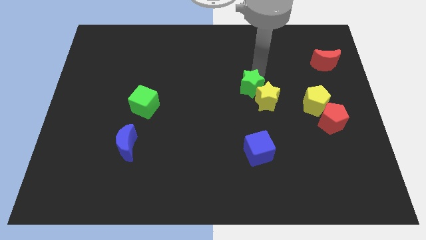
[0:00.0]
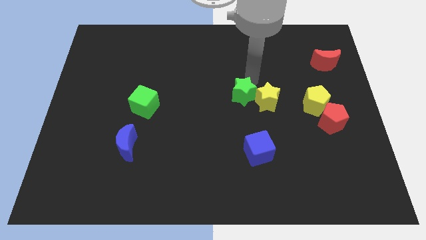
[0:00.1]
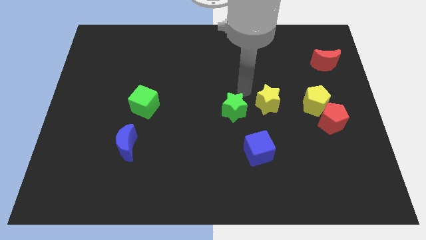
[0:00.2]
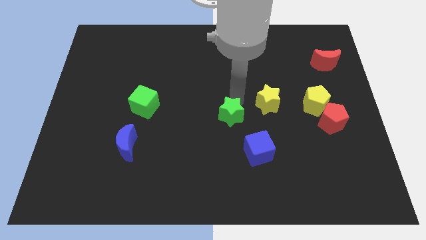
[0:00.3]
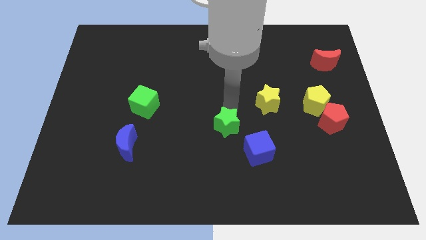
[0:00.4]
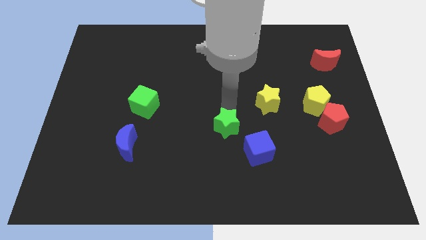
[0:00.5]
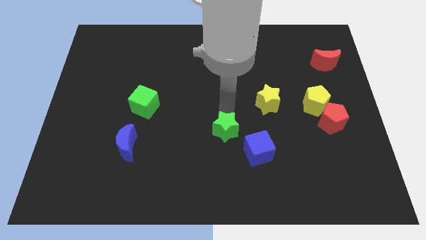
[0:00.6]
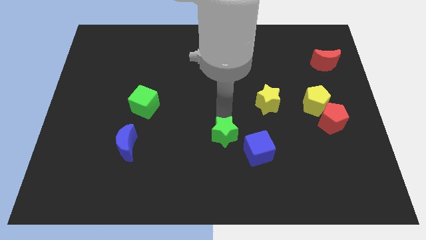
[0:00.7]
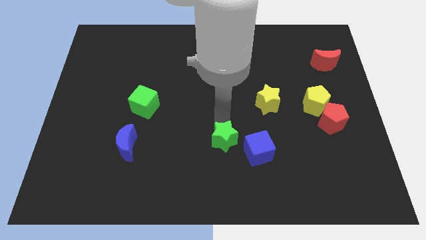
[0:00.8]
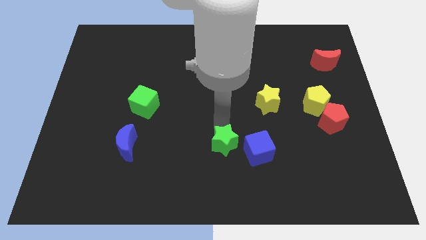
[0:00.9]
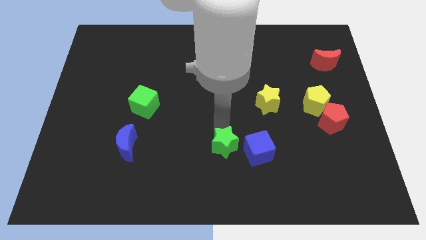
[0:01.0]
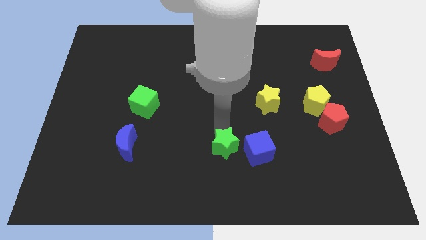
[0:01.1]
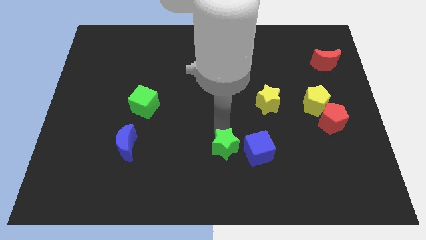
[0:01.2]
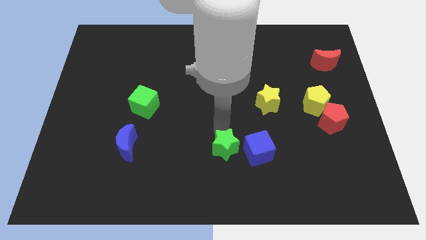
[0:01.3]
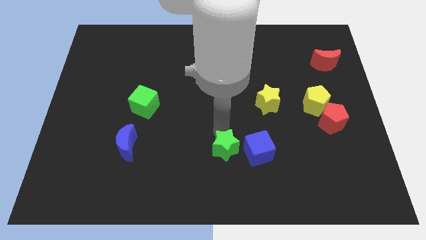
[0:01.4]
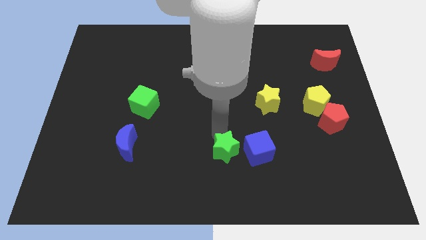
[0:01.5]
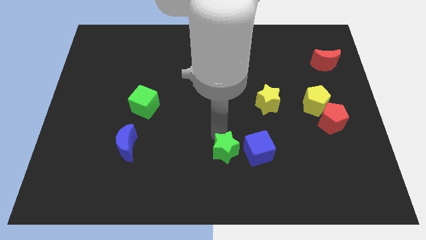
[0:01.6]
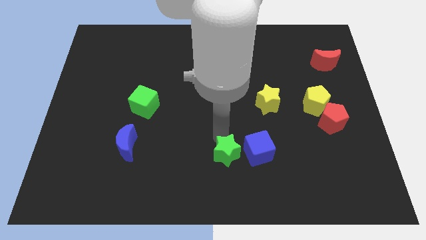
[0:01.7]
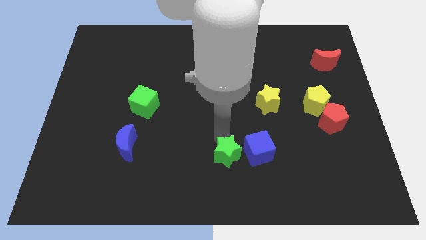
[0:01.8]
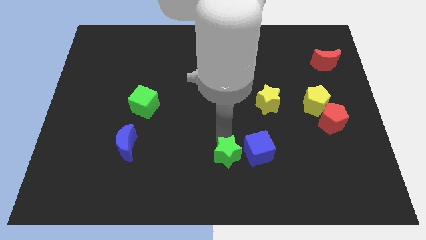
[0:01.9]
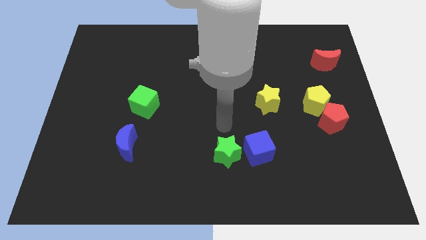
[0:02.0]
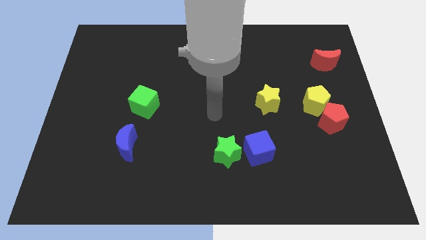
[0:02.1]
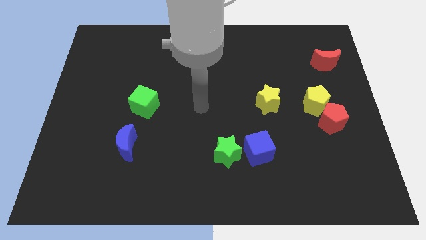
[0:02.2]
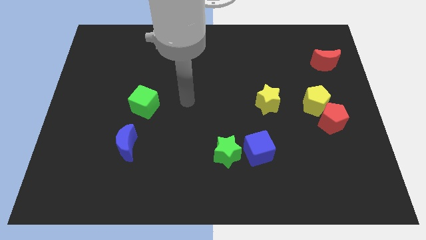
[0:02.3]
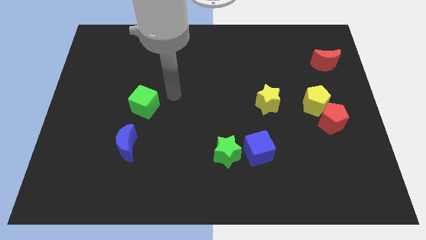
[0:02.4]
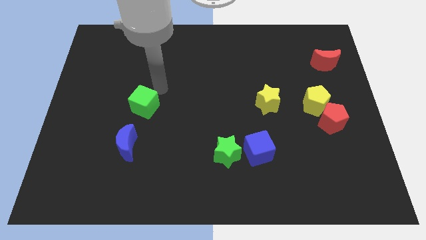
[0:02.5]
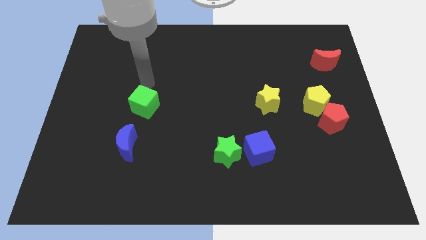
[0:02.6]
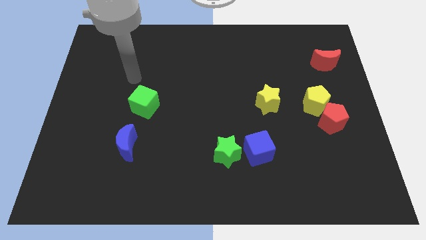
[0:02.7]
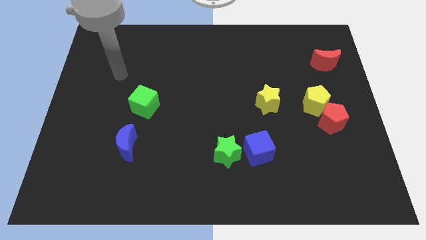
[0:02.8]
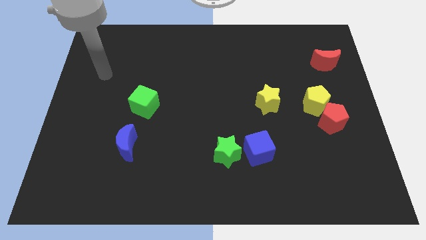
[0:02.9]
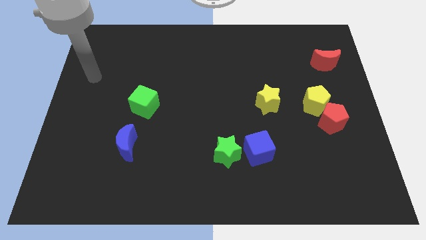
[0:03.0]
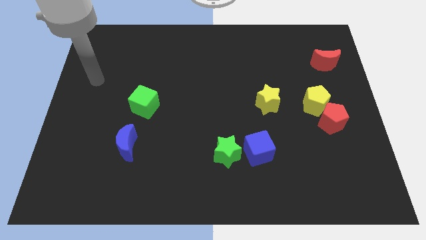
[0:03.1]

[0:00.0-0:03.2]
move the green star left to the blue cube

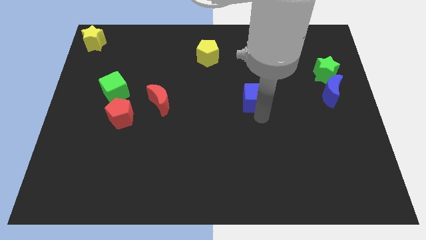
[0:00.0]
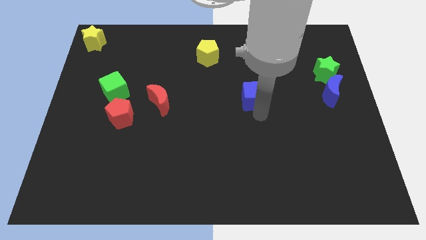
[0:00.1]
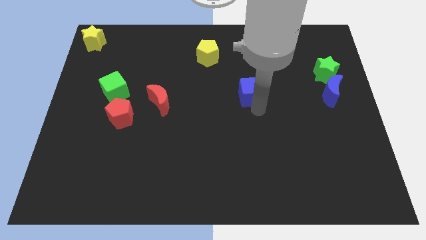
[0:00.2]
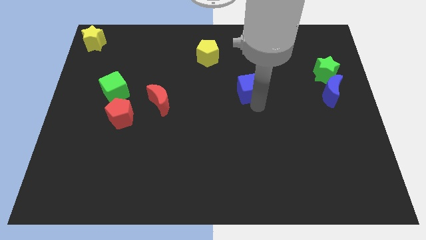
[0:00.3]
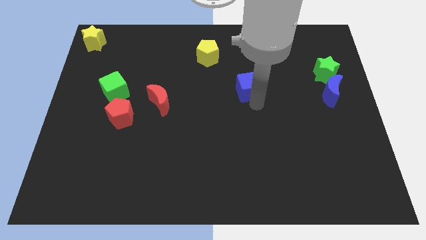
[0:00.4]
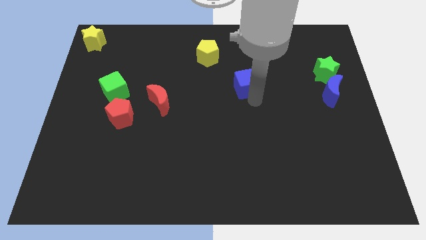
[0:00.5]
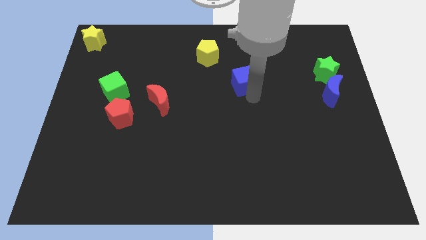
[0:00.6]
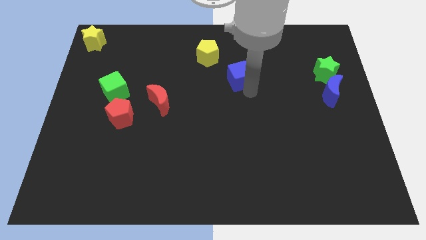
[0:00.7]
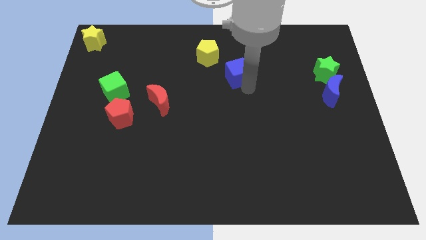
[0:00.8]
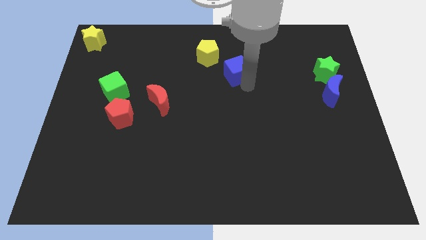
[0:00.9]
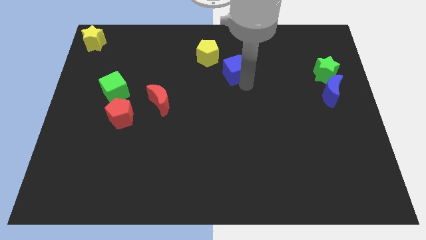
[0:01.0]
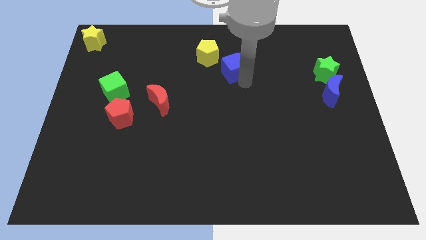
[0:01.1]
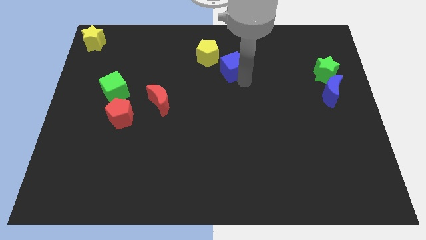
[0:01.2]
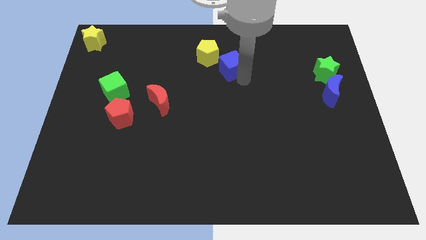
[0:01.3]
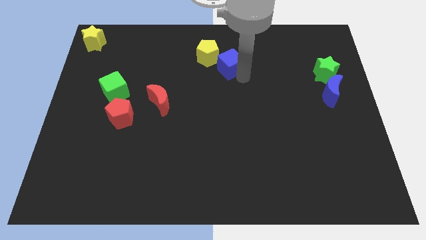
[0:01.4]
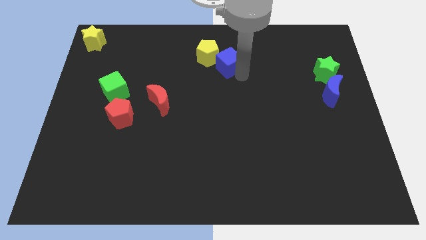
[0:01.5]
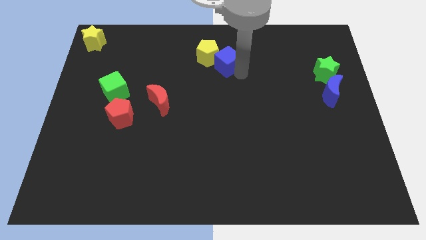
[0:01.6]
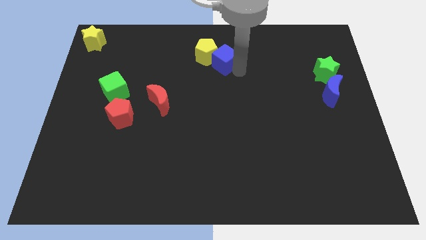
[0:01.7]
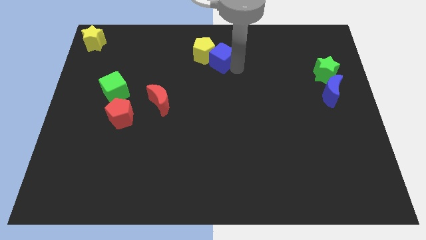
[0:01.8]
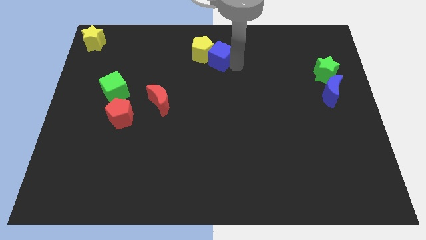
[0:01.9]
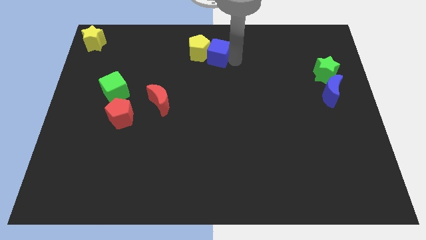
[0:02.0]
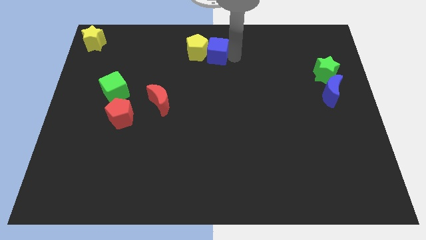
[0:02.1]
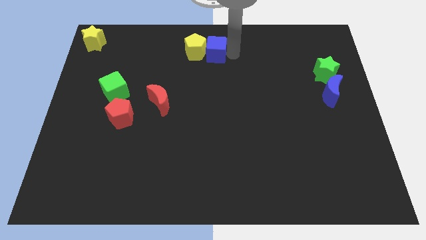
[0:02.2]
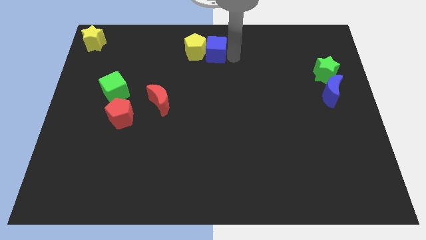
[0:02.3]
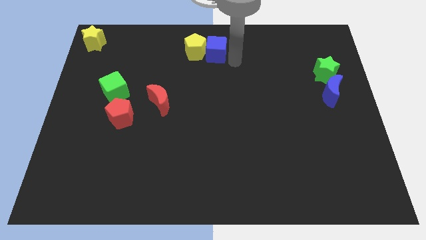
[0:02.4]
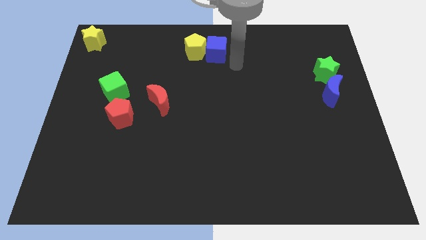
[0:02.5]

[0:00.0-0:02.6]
move blue cube beside yellow pentagon

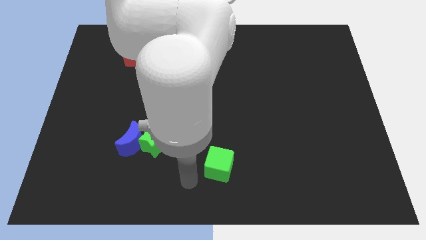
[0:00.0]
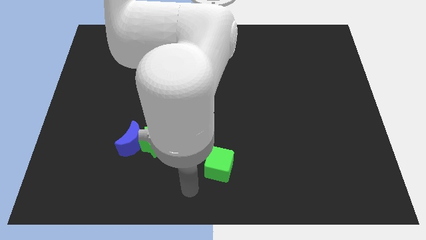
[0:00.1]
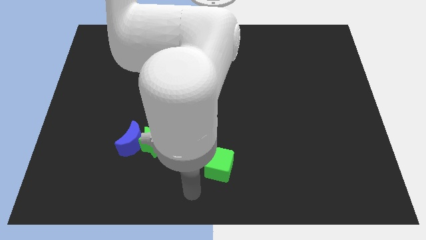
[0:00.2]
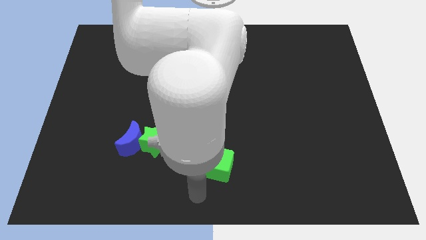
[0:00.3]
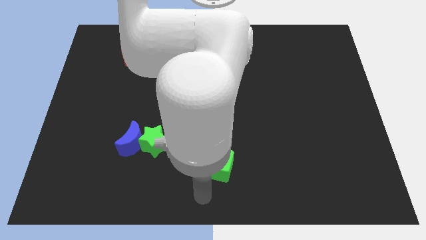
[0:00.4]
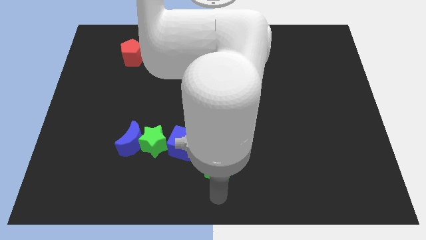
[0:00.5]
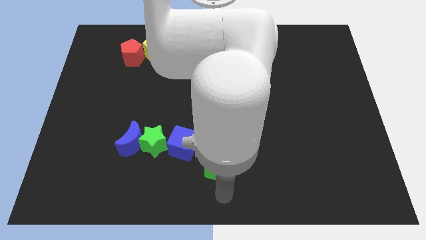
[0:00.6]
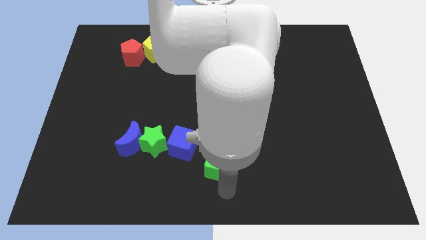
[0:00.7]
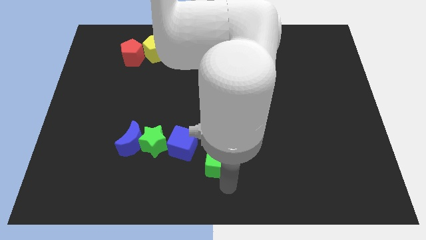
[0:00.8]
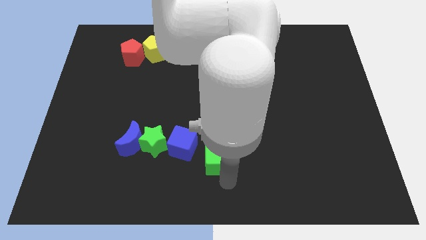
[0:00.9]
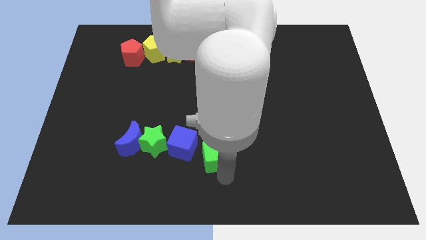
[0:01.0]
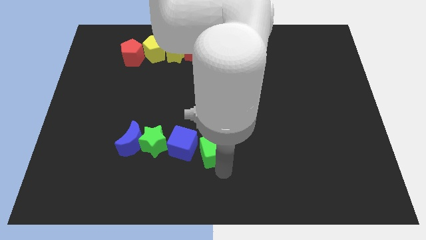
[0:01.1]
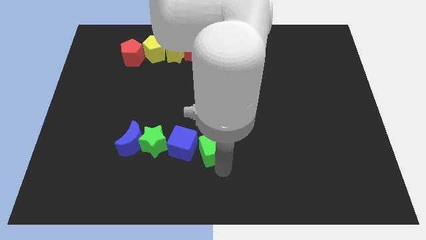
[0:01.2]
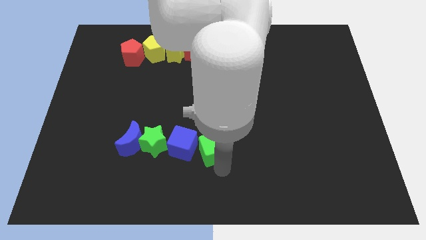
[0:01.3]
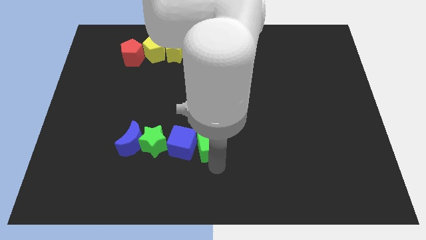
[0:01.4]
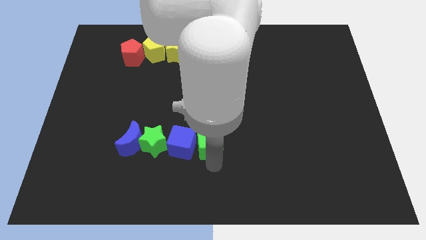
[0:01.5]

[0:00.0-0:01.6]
push the green cube close to the blue cube

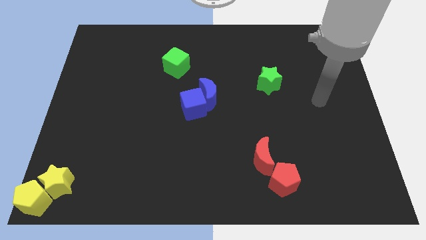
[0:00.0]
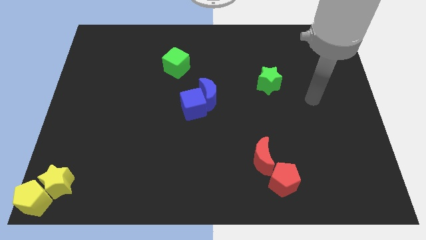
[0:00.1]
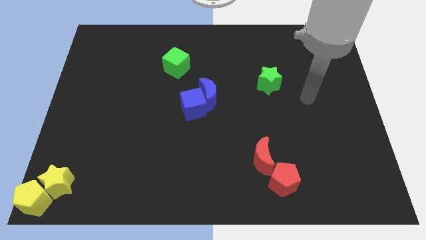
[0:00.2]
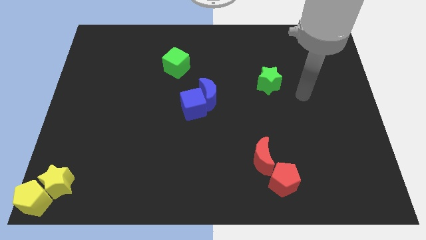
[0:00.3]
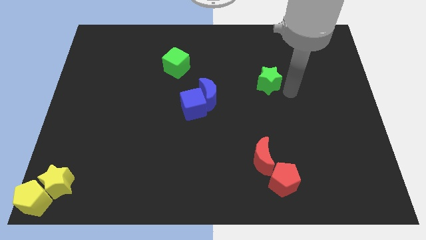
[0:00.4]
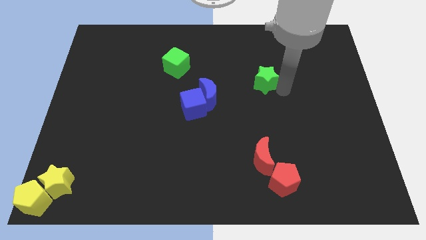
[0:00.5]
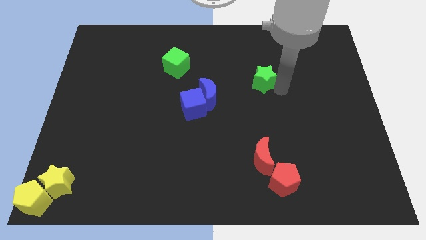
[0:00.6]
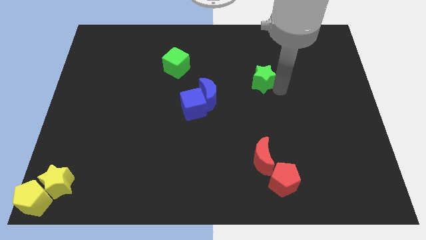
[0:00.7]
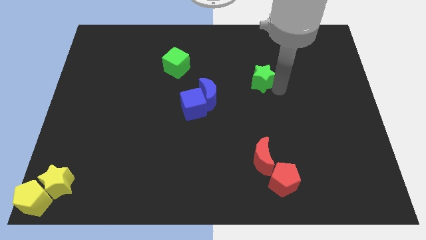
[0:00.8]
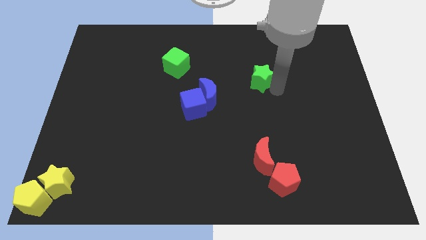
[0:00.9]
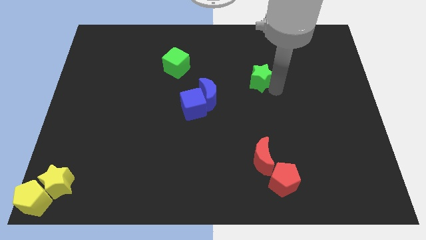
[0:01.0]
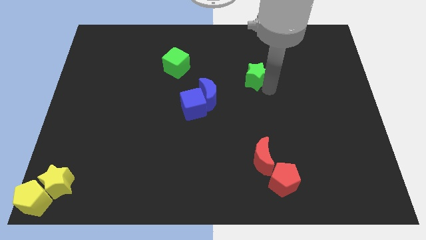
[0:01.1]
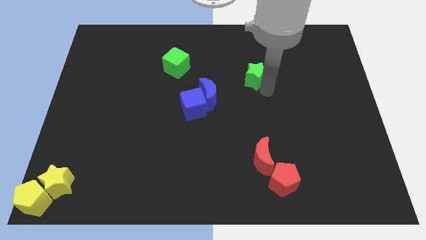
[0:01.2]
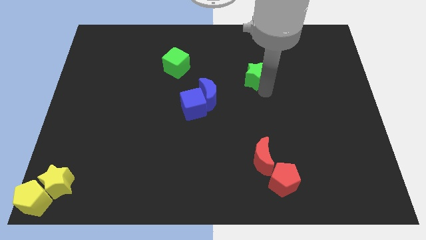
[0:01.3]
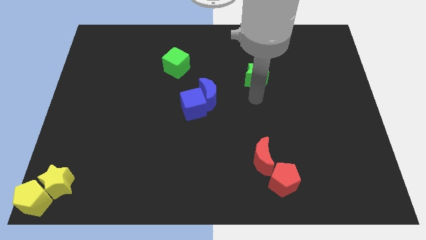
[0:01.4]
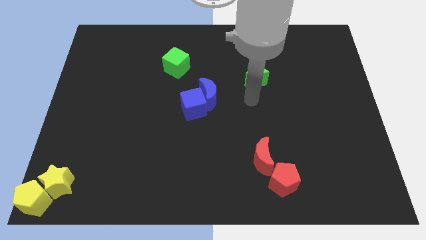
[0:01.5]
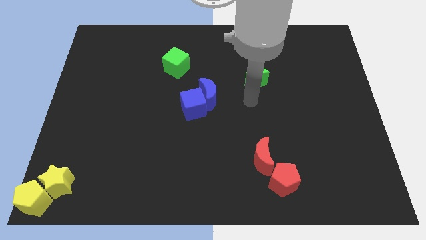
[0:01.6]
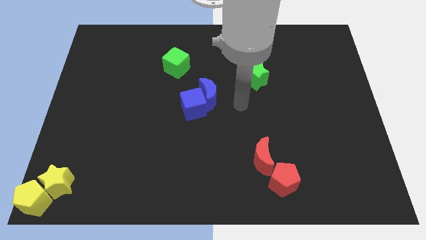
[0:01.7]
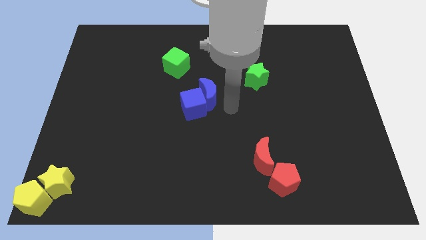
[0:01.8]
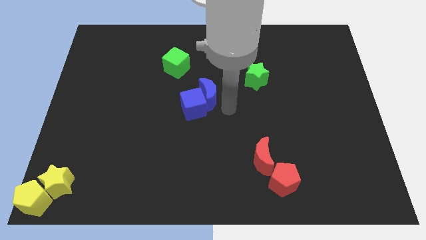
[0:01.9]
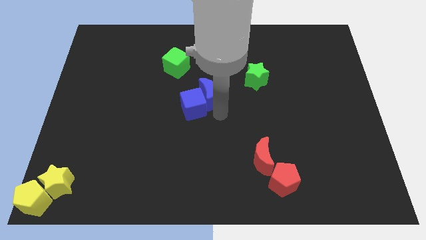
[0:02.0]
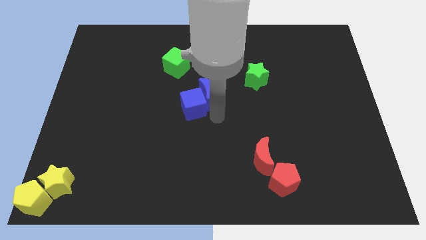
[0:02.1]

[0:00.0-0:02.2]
point the arm below the blue moon
